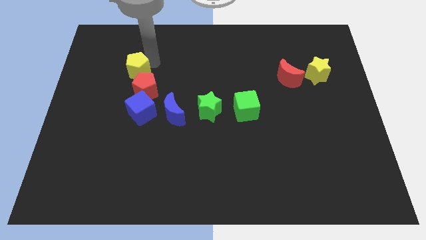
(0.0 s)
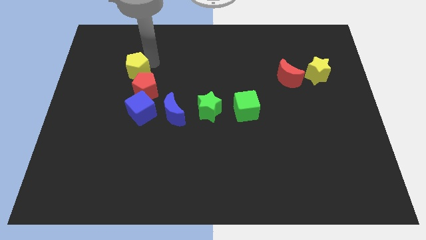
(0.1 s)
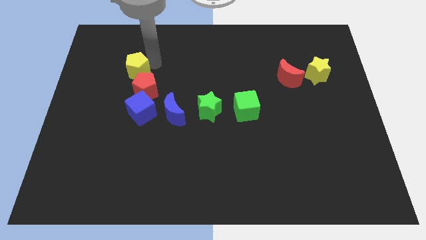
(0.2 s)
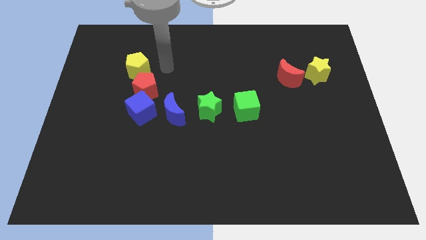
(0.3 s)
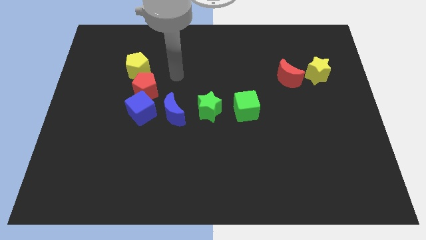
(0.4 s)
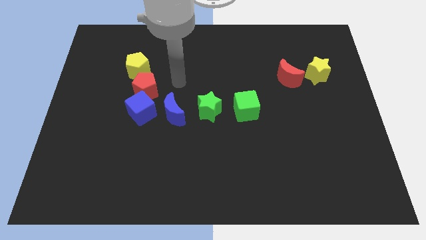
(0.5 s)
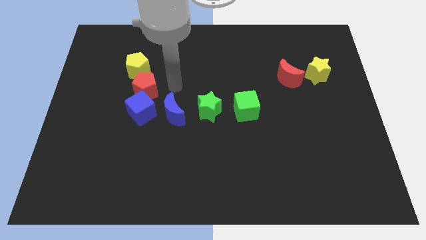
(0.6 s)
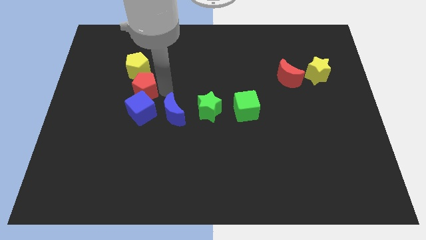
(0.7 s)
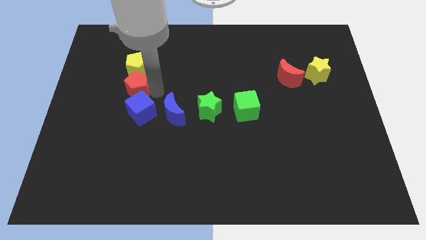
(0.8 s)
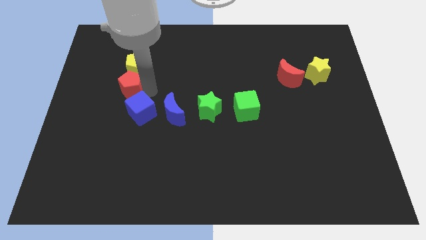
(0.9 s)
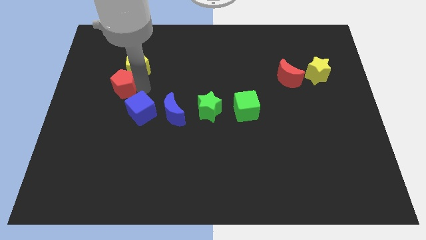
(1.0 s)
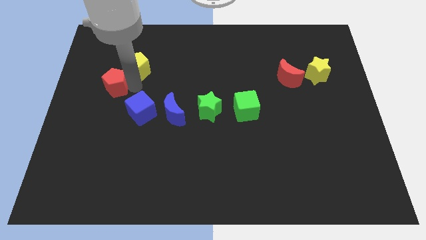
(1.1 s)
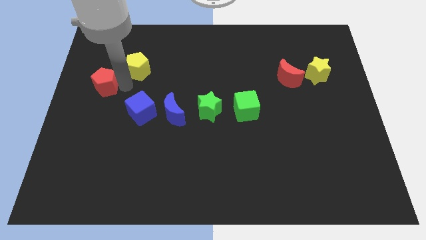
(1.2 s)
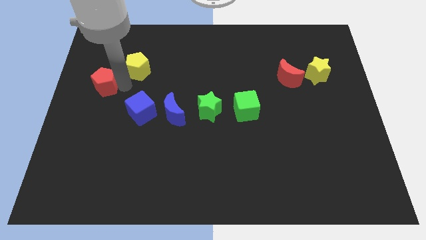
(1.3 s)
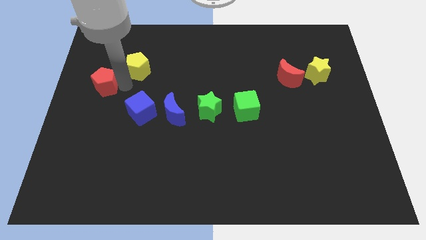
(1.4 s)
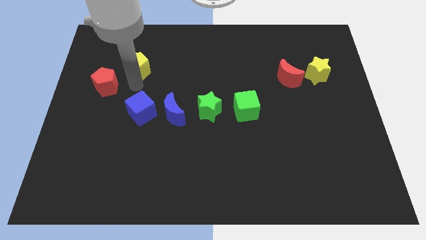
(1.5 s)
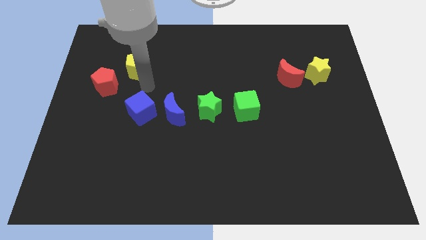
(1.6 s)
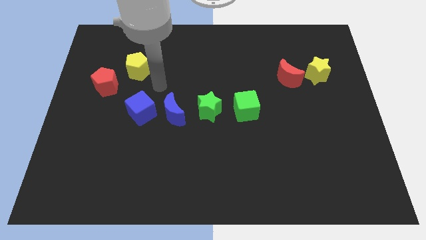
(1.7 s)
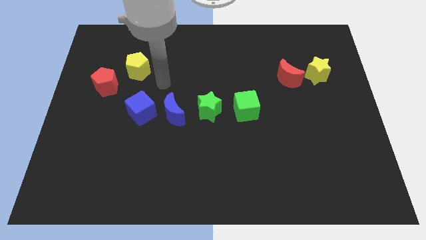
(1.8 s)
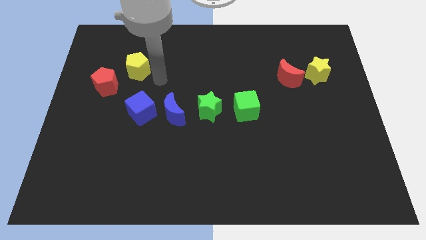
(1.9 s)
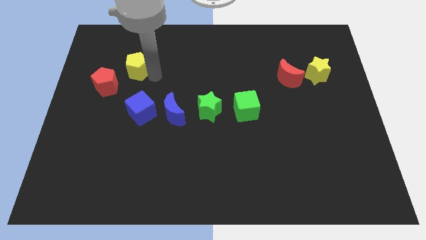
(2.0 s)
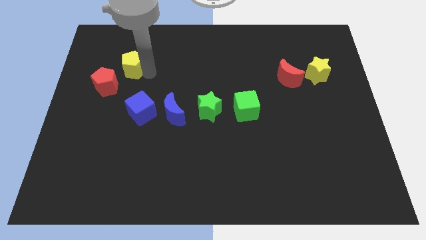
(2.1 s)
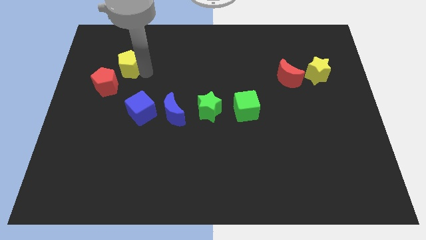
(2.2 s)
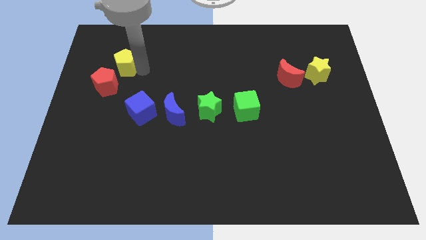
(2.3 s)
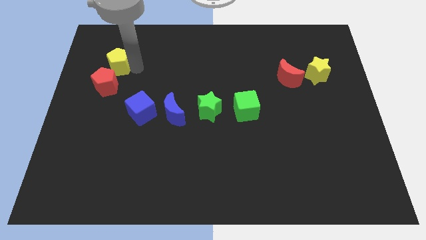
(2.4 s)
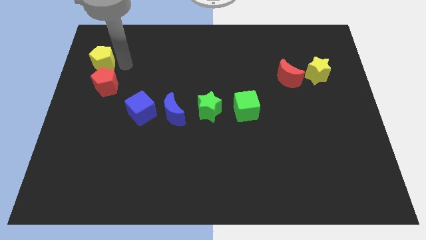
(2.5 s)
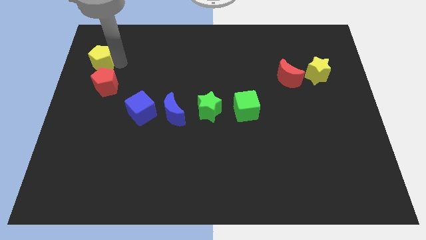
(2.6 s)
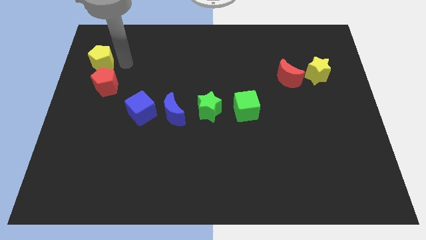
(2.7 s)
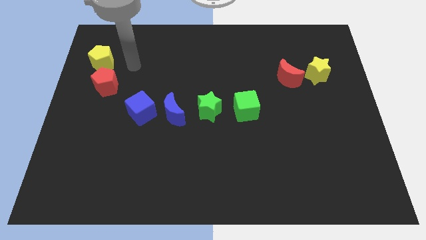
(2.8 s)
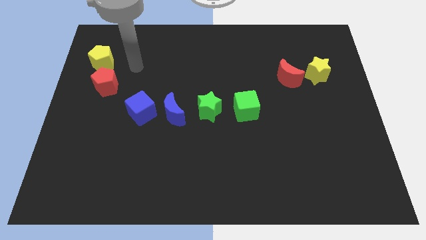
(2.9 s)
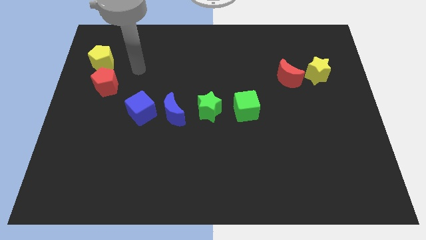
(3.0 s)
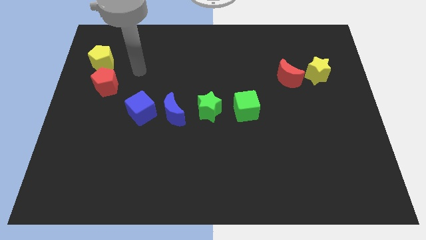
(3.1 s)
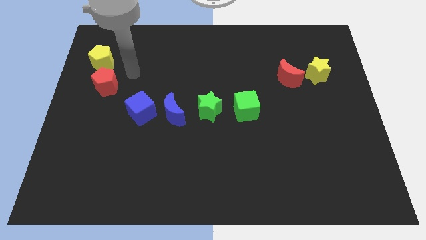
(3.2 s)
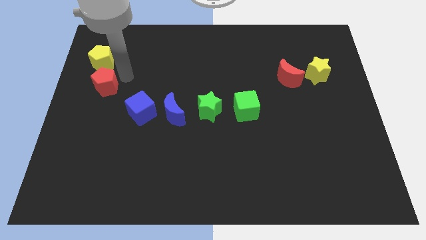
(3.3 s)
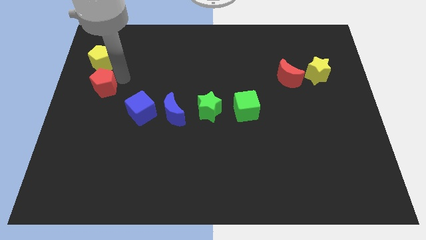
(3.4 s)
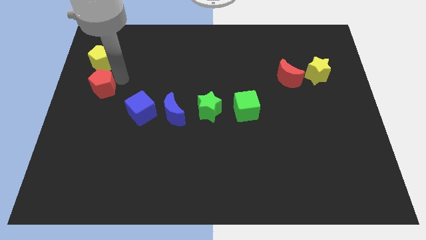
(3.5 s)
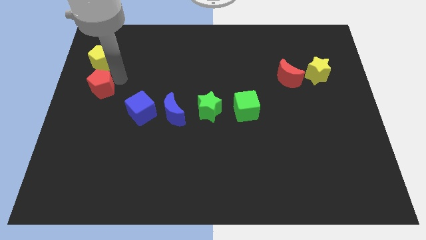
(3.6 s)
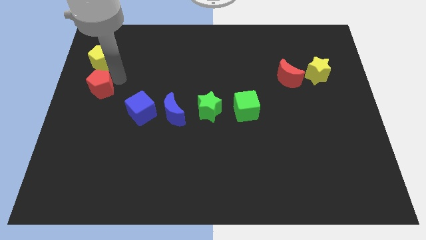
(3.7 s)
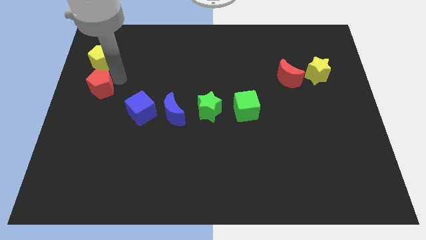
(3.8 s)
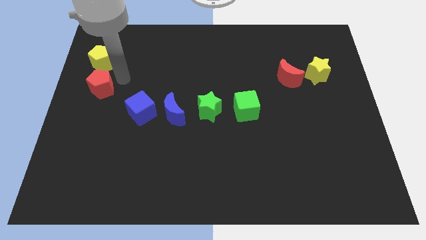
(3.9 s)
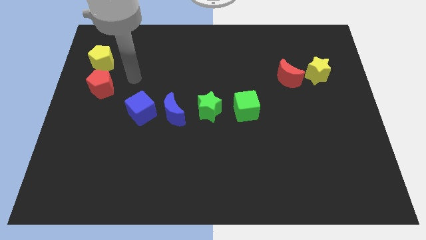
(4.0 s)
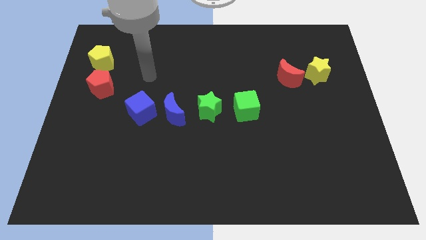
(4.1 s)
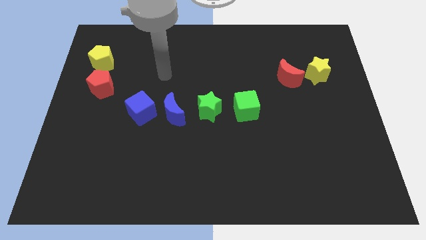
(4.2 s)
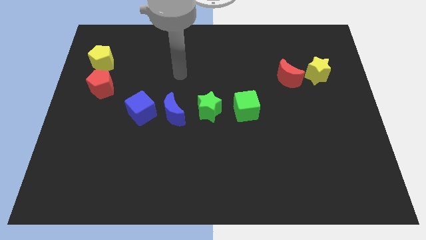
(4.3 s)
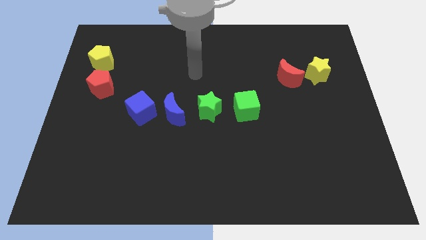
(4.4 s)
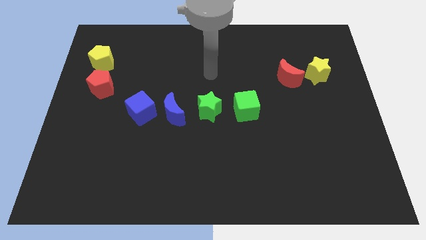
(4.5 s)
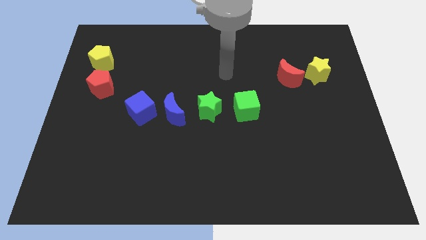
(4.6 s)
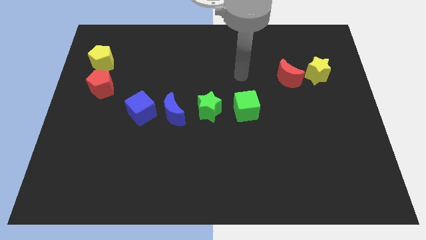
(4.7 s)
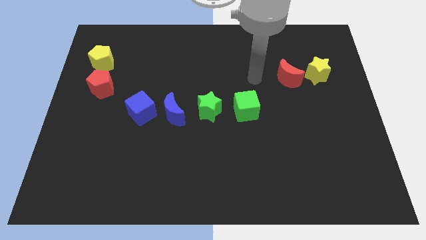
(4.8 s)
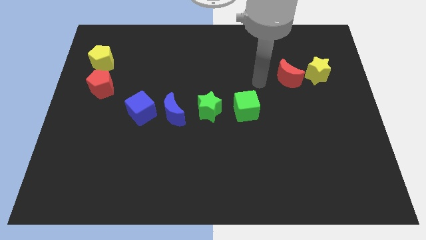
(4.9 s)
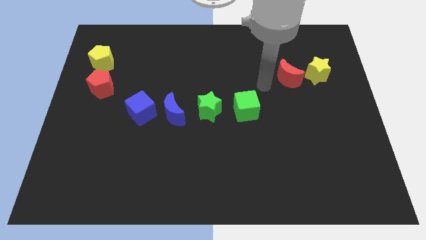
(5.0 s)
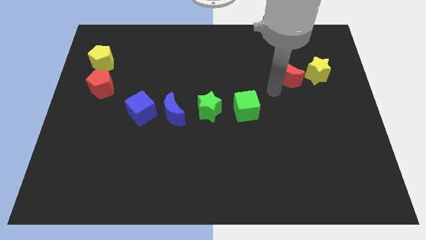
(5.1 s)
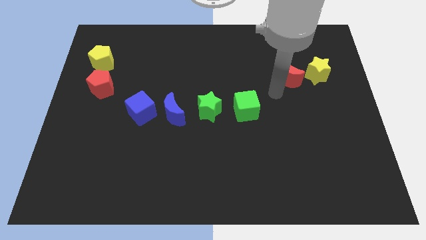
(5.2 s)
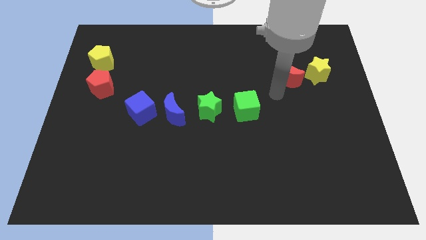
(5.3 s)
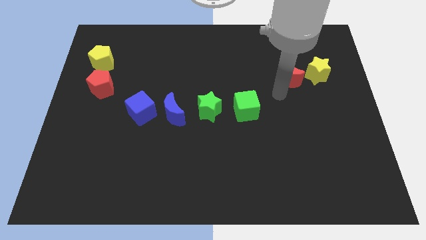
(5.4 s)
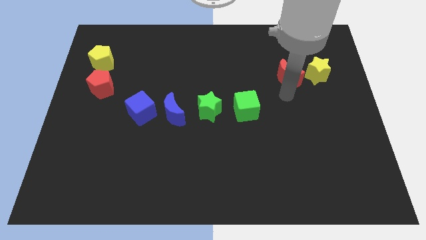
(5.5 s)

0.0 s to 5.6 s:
move the pentagons slightly left

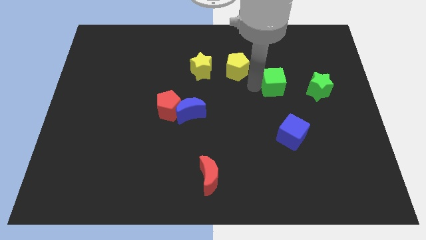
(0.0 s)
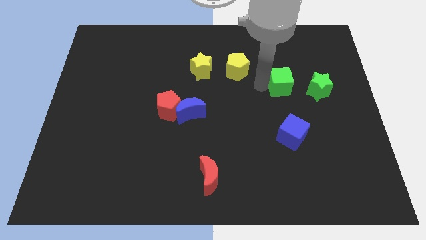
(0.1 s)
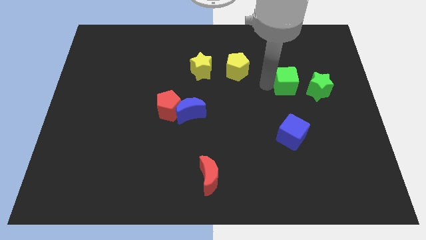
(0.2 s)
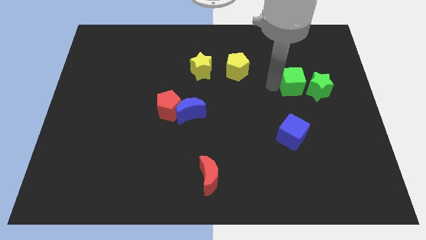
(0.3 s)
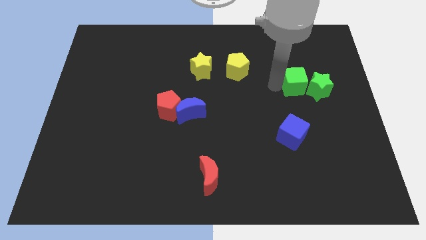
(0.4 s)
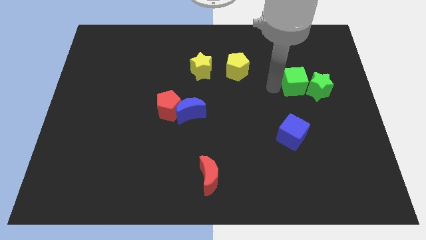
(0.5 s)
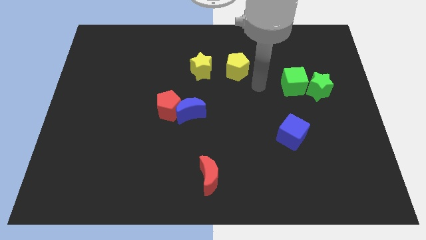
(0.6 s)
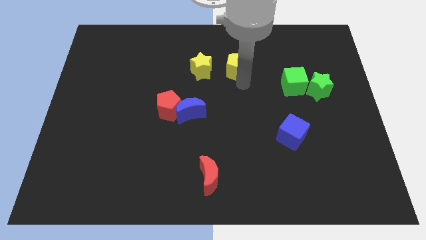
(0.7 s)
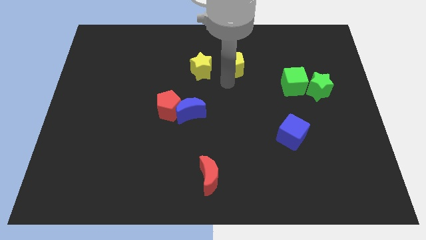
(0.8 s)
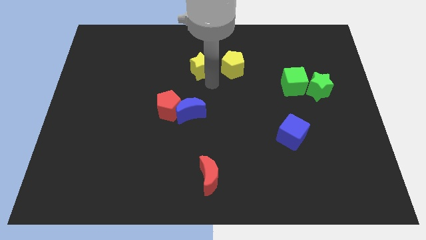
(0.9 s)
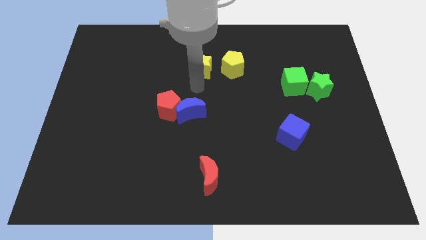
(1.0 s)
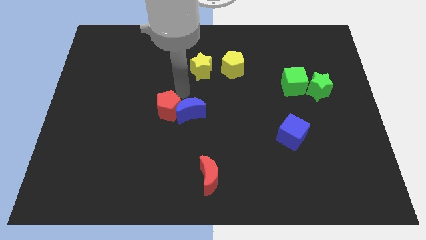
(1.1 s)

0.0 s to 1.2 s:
move green cube into green star

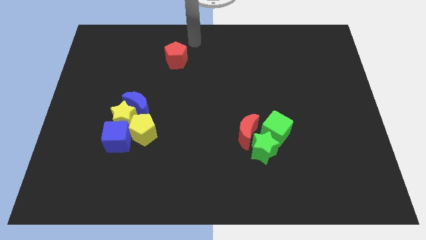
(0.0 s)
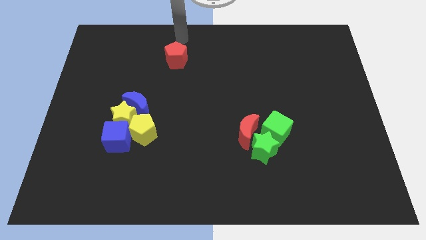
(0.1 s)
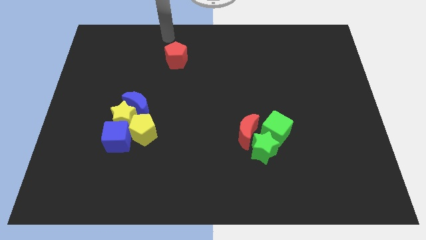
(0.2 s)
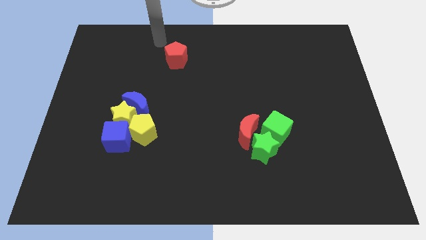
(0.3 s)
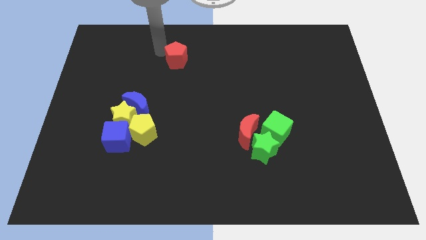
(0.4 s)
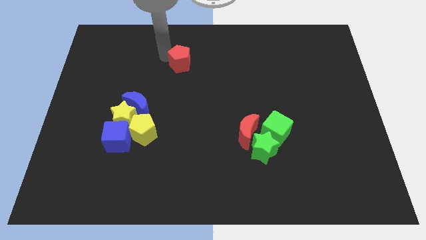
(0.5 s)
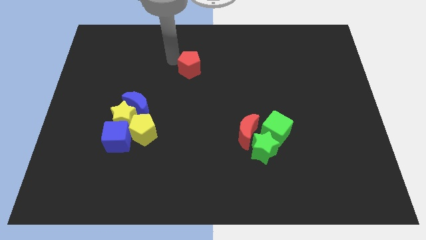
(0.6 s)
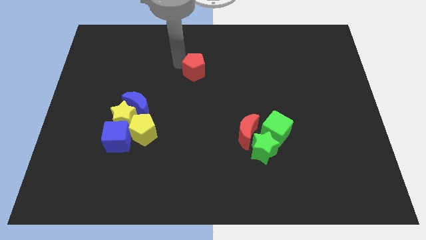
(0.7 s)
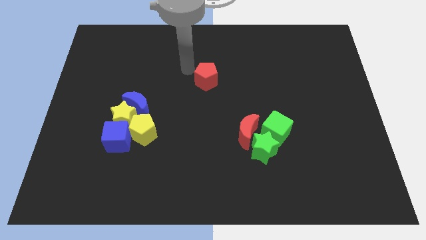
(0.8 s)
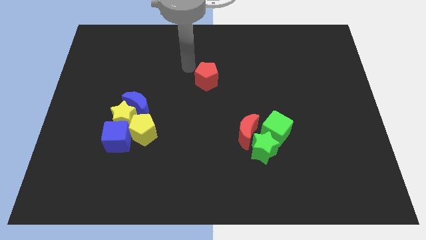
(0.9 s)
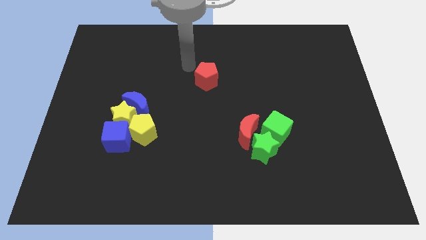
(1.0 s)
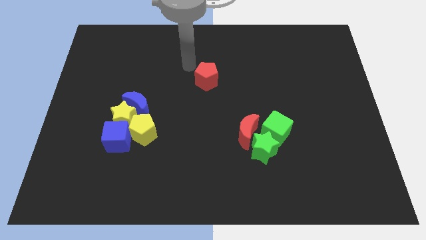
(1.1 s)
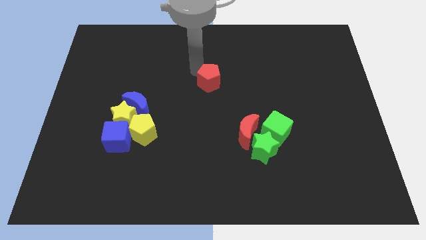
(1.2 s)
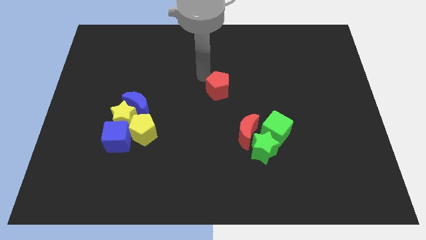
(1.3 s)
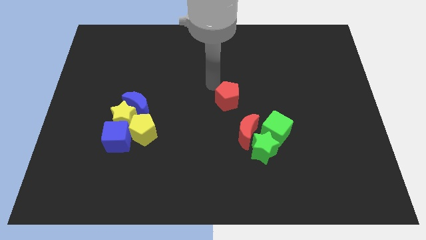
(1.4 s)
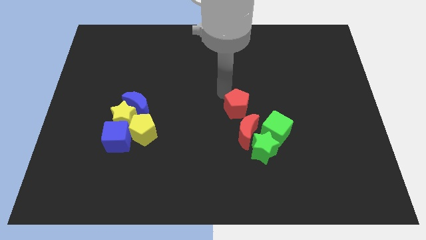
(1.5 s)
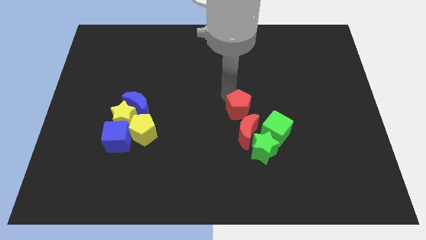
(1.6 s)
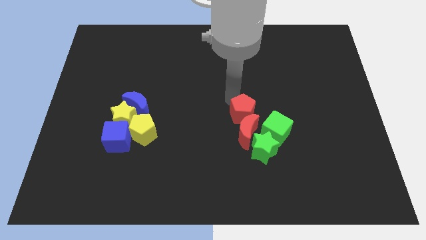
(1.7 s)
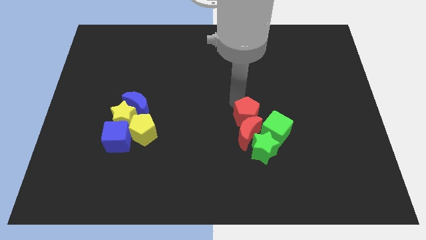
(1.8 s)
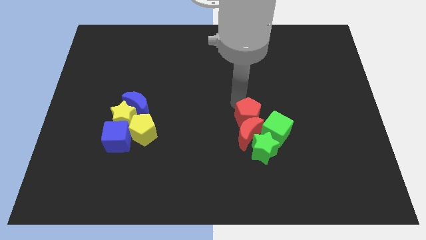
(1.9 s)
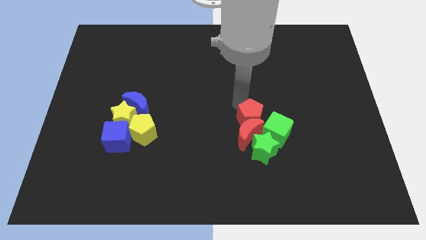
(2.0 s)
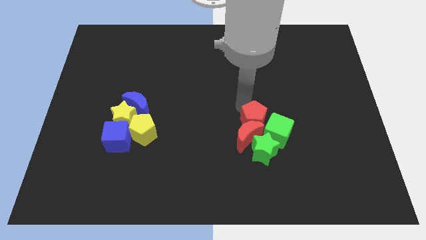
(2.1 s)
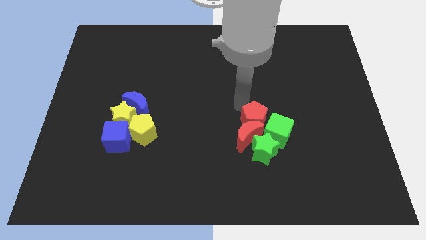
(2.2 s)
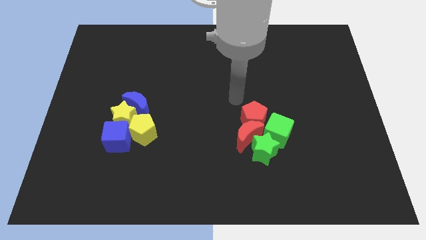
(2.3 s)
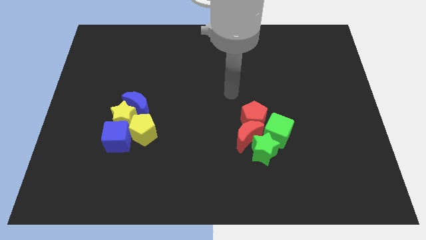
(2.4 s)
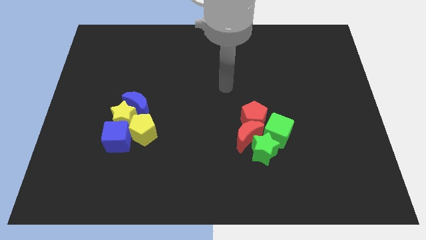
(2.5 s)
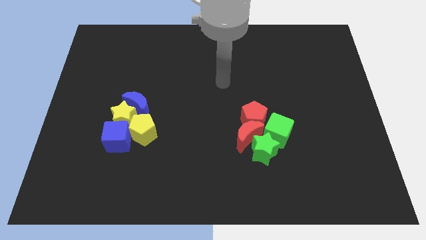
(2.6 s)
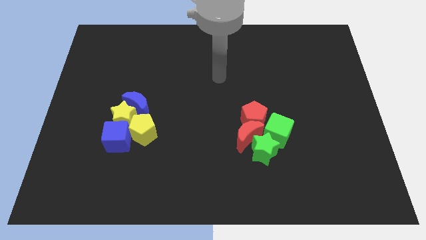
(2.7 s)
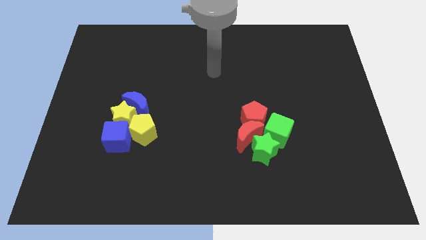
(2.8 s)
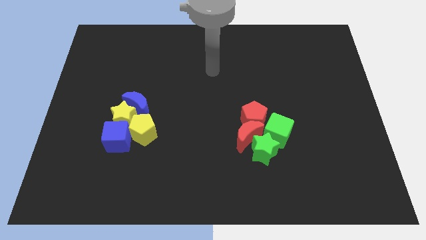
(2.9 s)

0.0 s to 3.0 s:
push the red pentagon into the red crescent and green star
